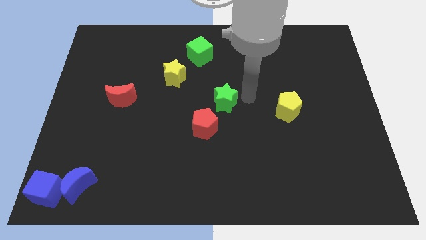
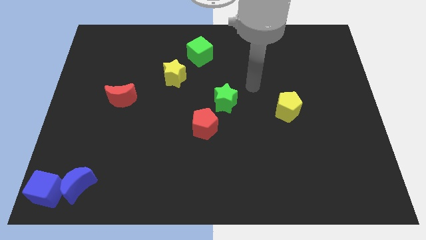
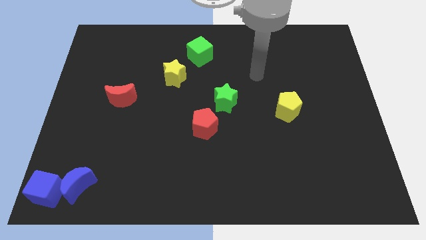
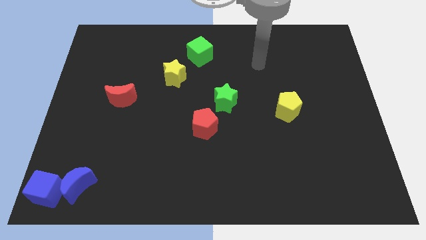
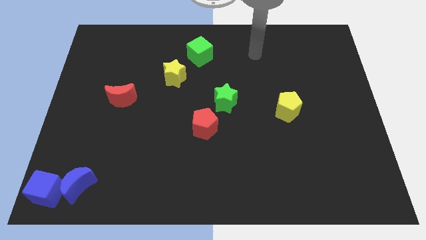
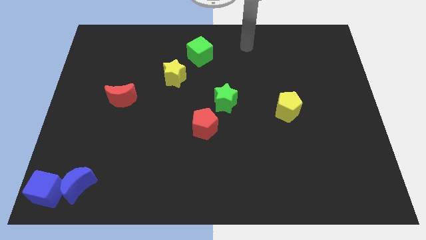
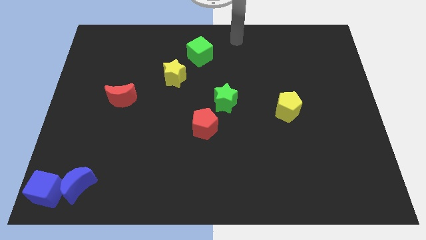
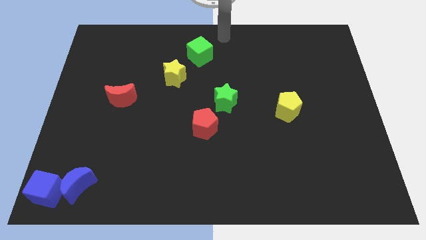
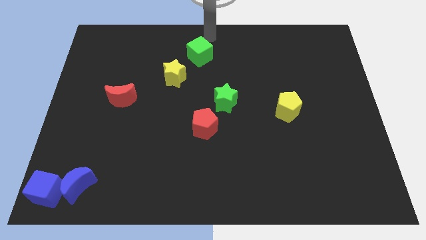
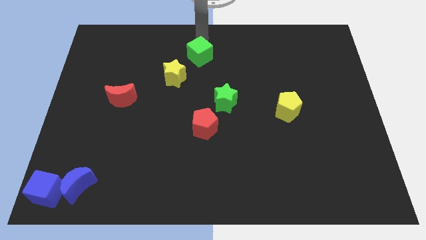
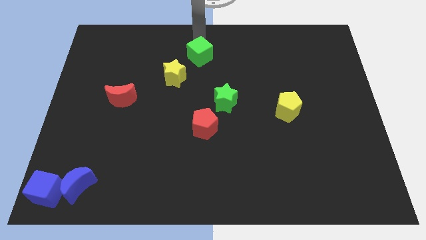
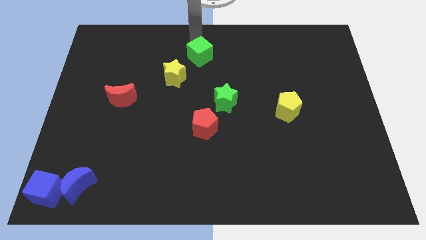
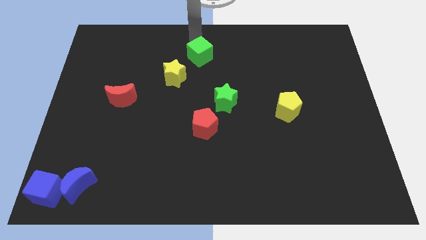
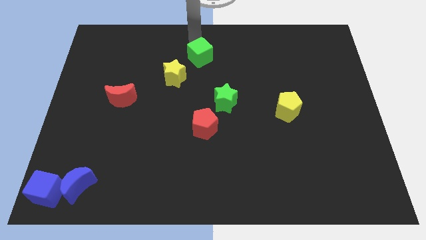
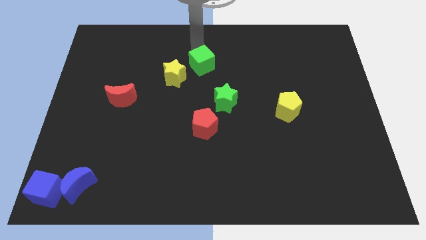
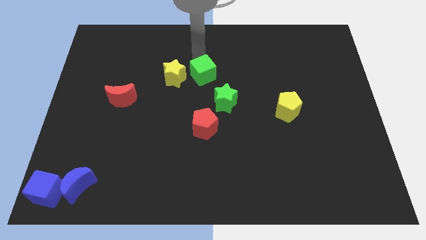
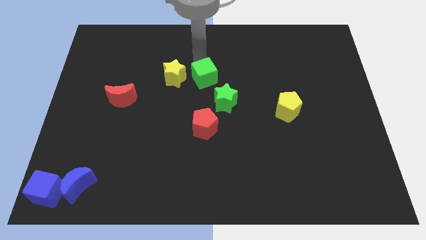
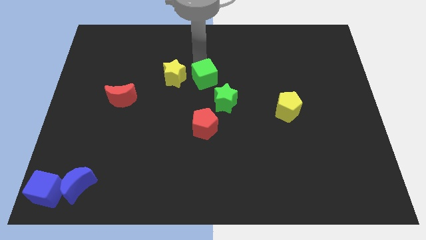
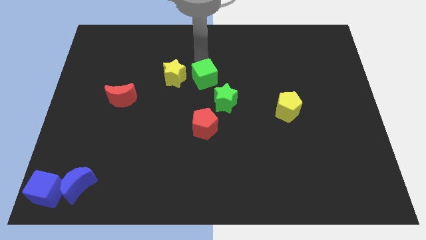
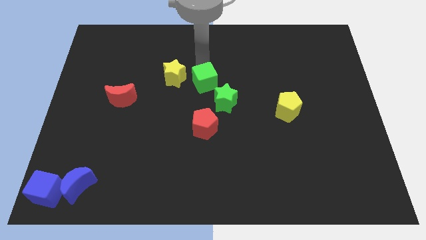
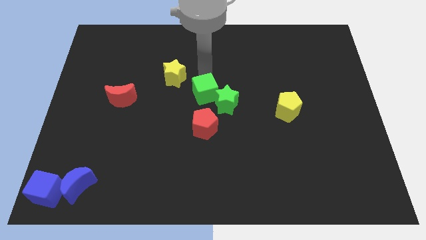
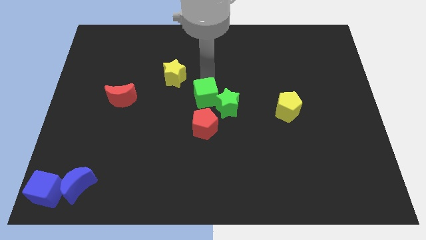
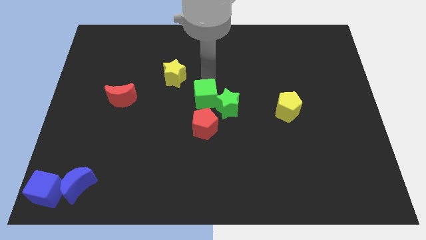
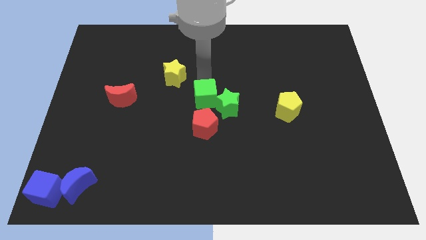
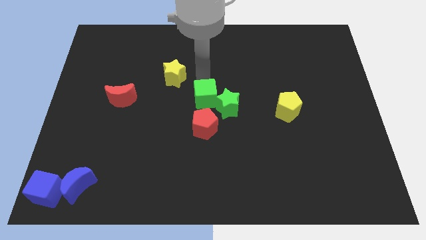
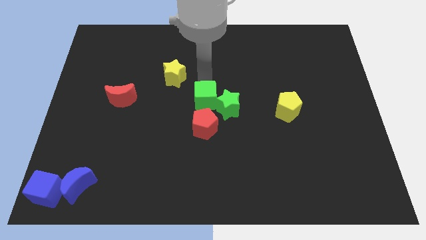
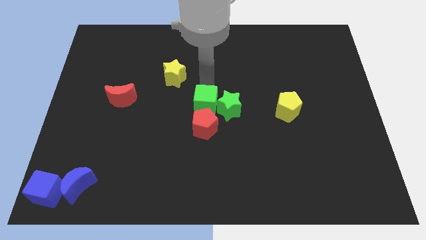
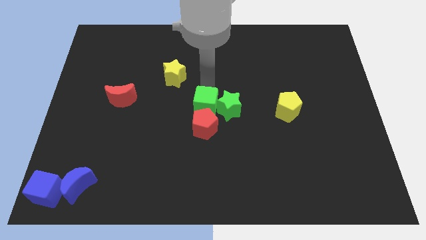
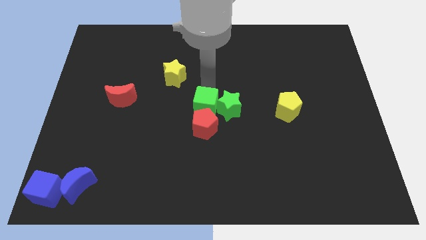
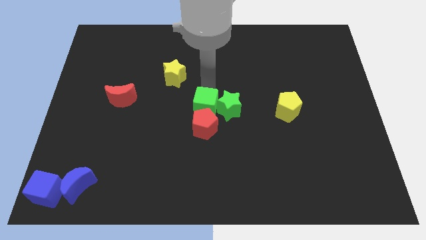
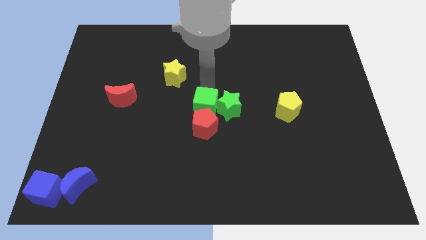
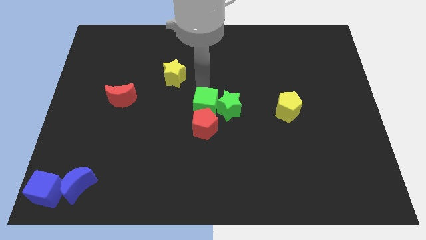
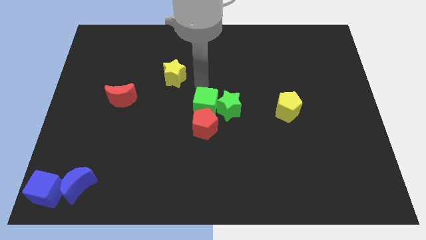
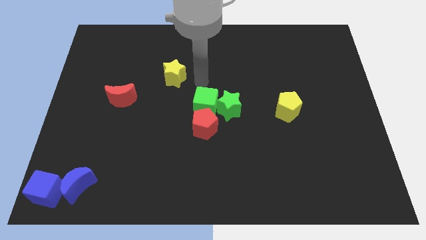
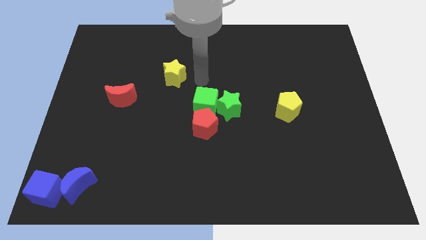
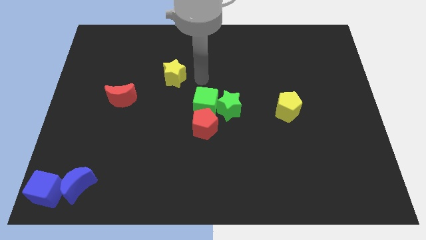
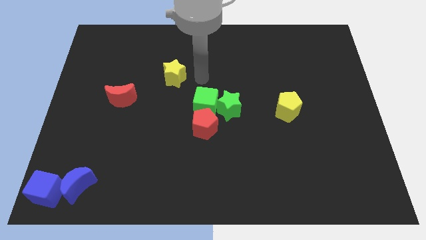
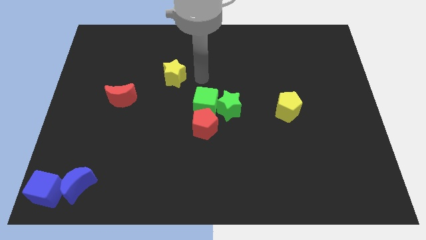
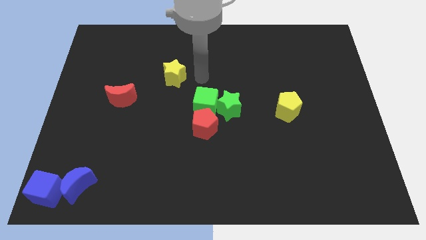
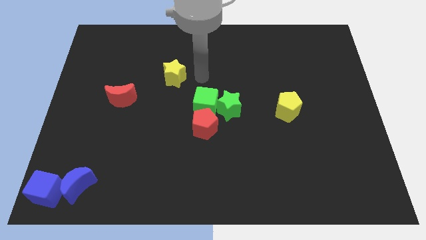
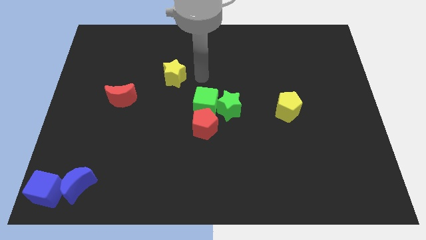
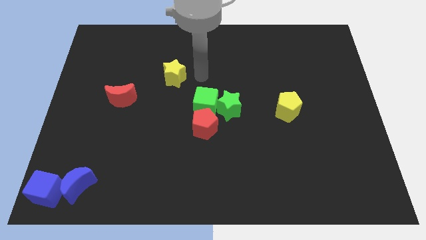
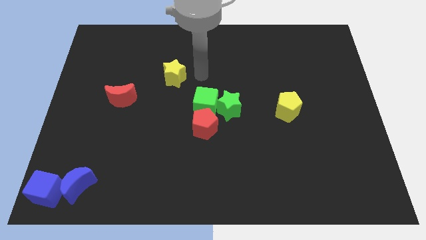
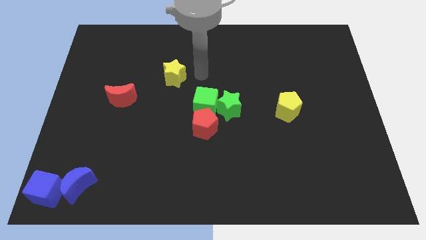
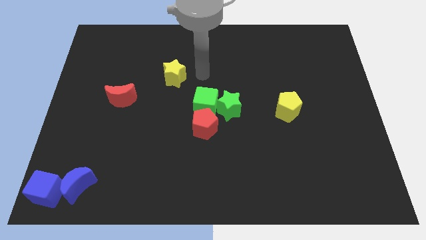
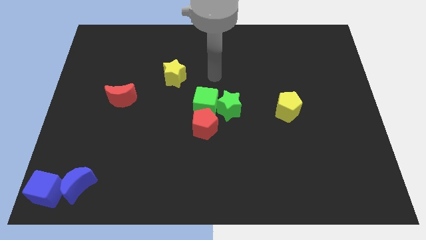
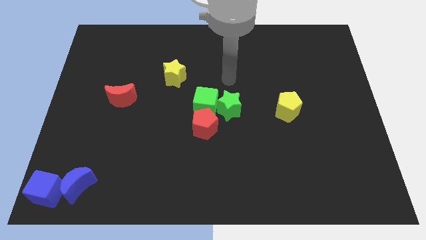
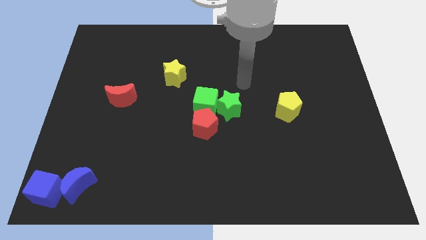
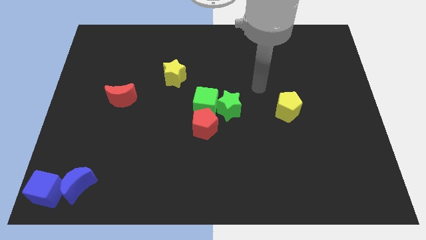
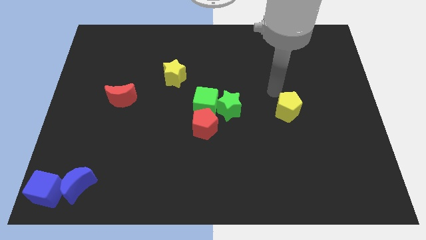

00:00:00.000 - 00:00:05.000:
push the green cube into the green star

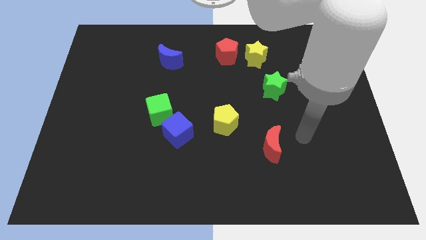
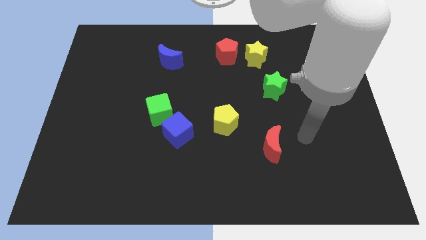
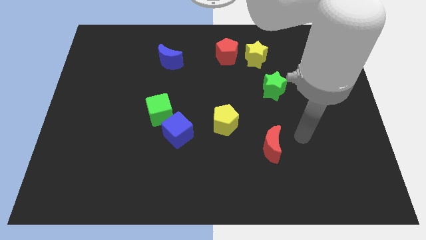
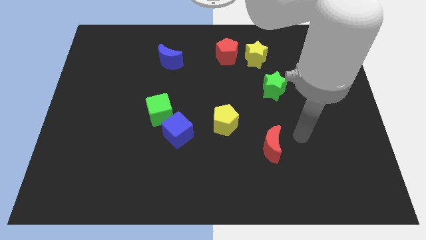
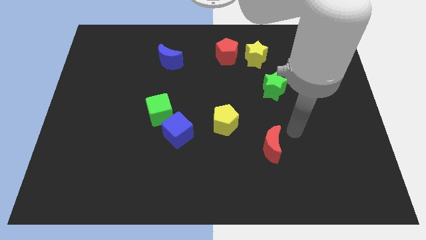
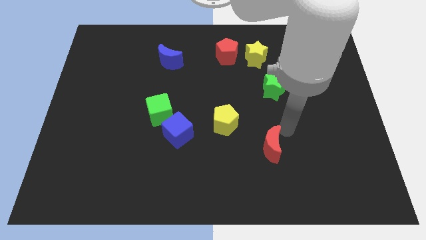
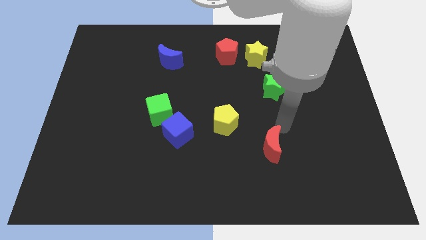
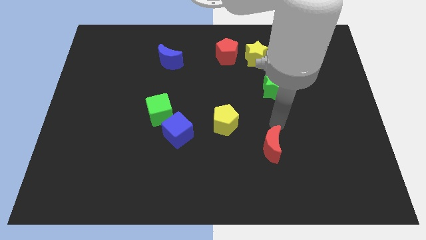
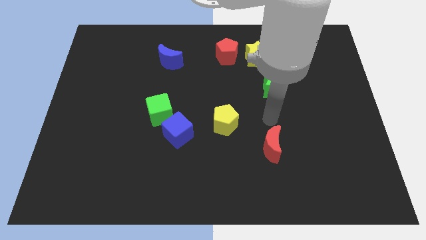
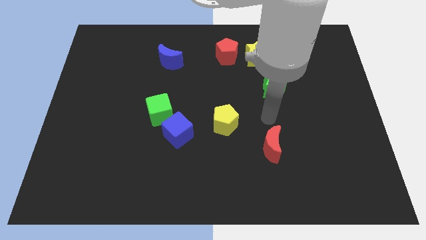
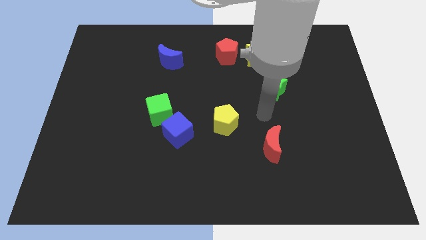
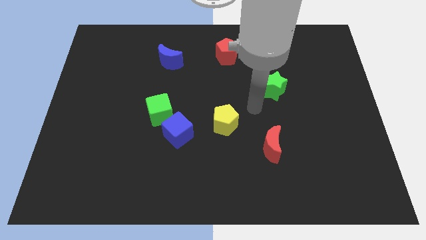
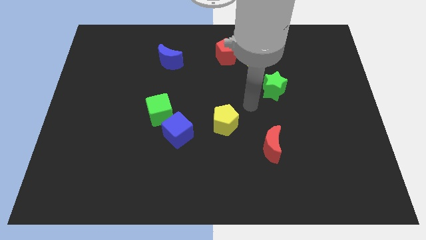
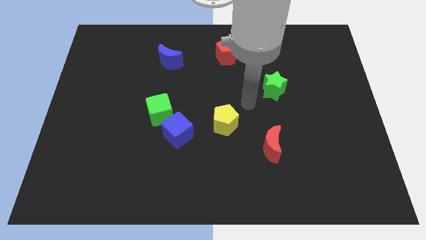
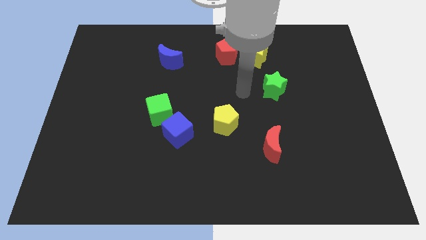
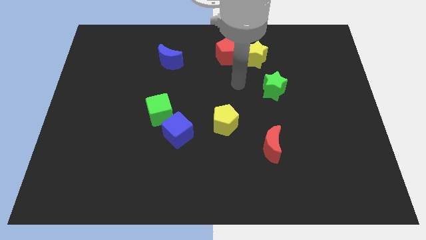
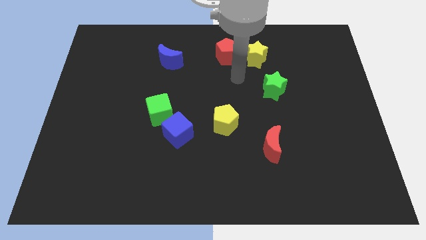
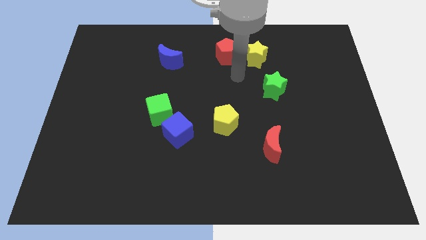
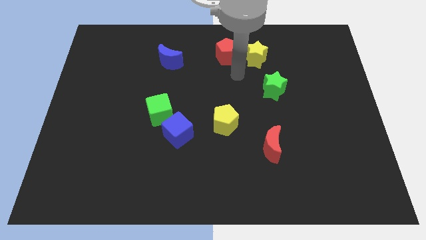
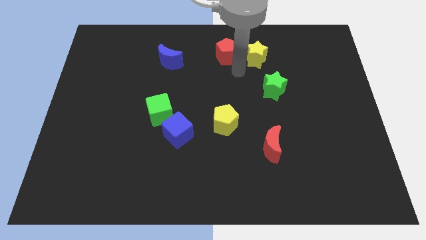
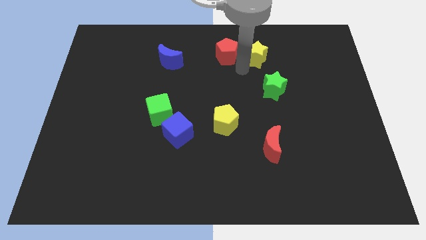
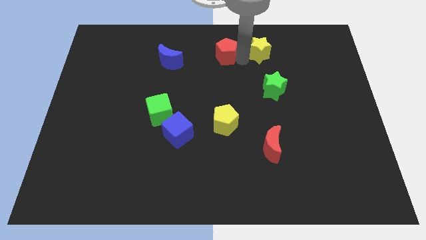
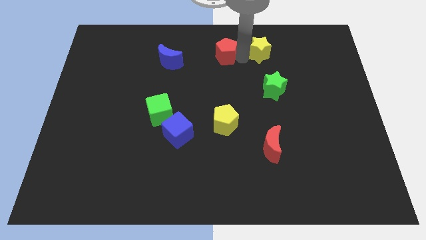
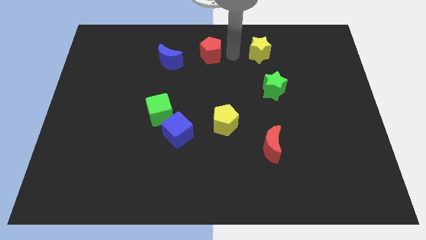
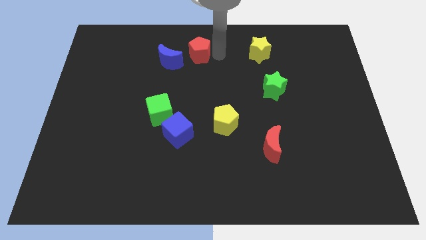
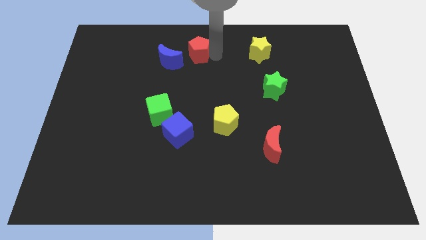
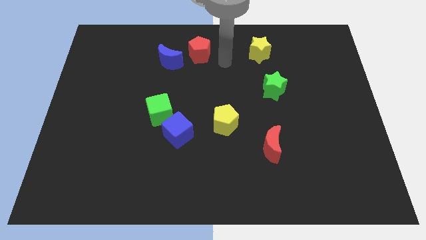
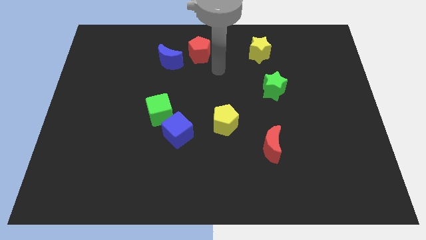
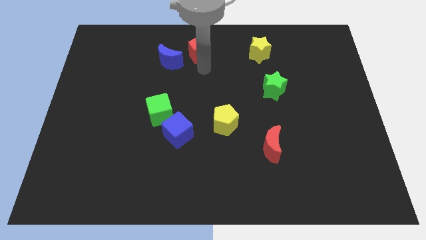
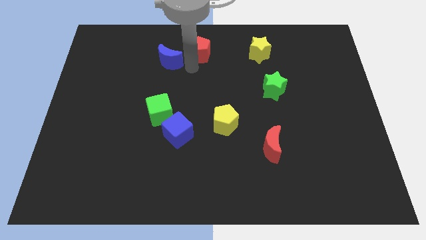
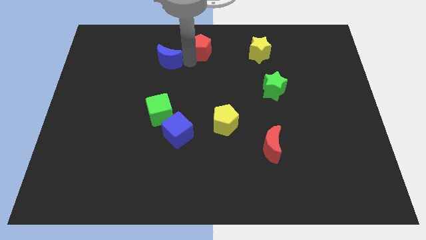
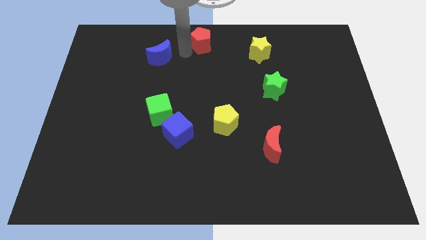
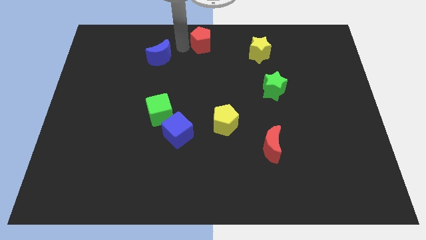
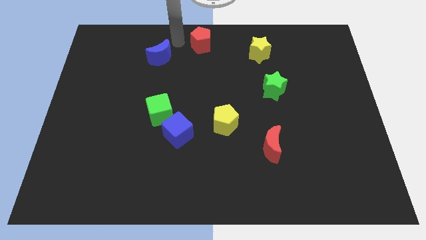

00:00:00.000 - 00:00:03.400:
push the red pentagon away from the yellow star

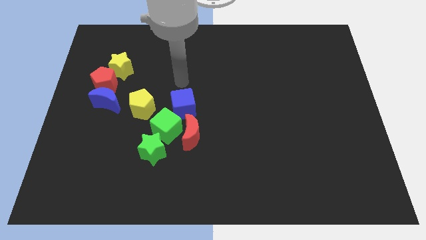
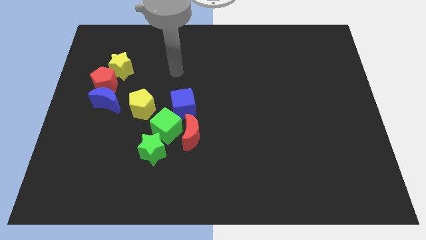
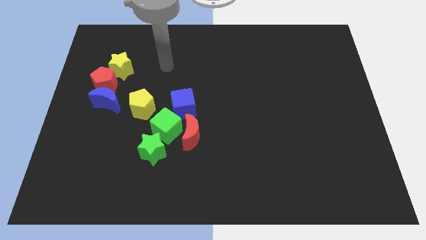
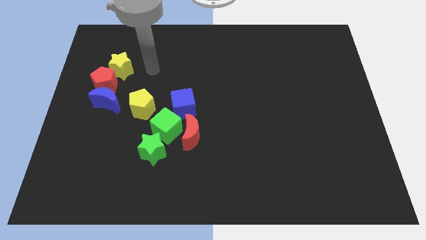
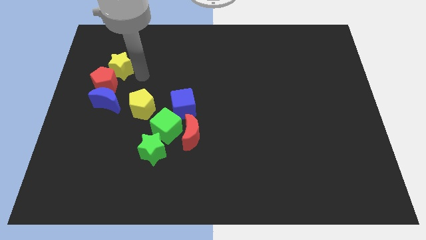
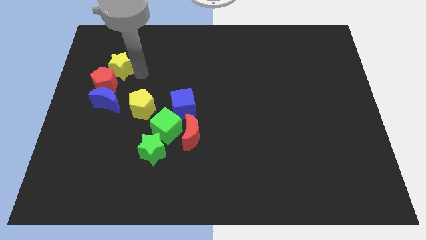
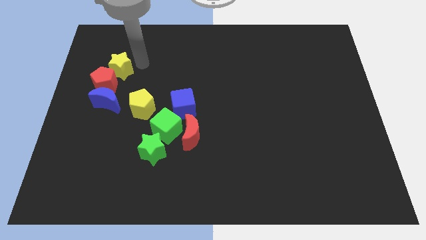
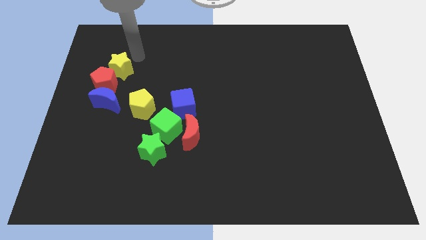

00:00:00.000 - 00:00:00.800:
point your arm to the right side of yellow star
